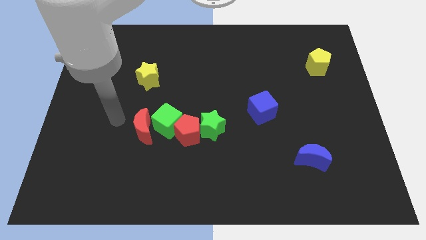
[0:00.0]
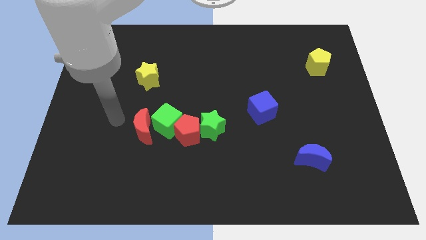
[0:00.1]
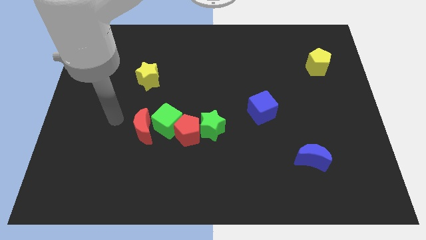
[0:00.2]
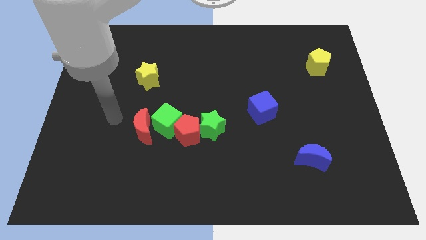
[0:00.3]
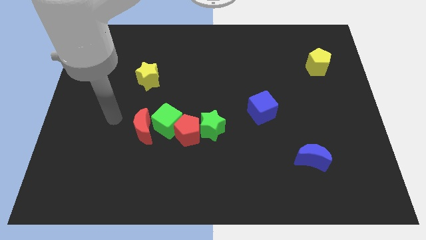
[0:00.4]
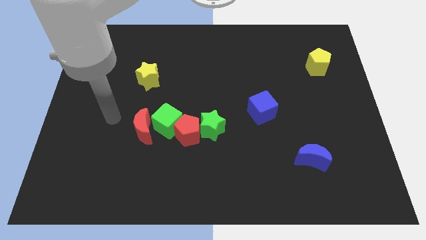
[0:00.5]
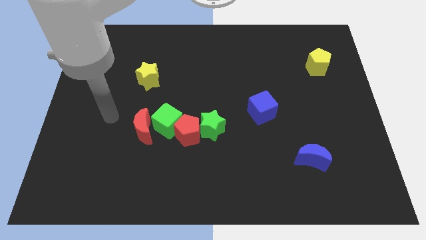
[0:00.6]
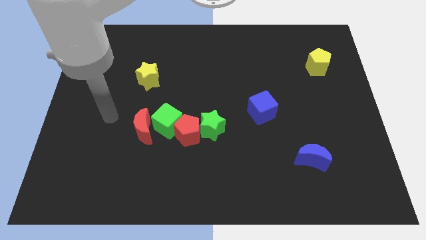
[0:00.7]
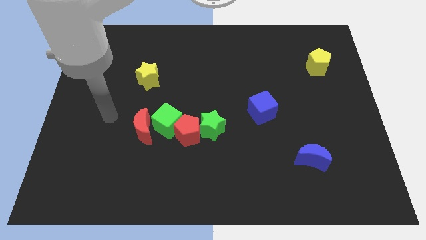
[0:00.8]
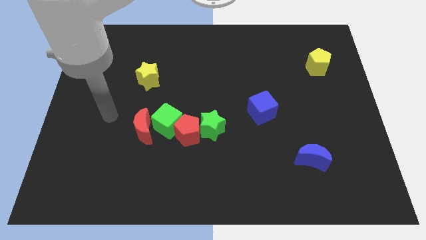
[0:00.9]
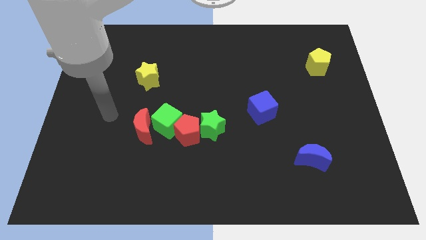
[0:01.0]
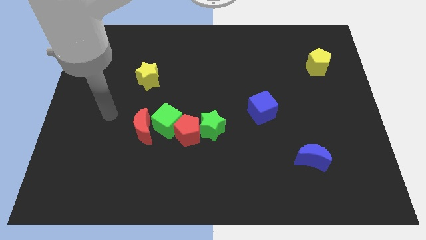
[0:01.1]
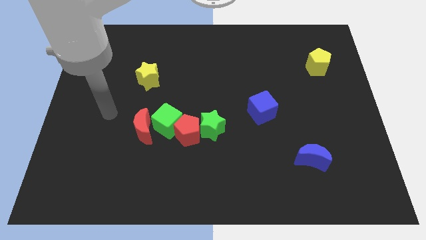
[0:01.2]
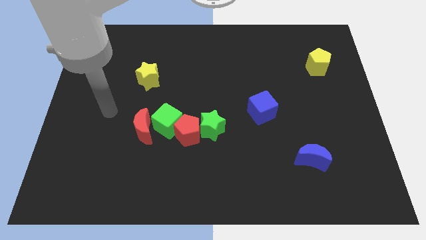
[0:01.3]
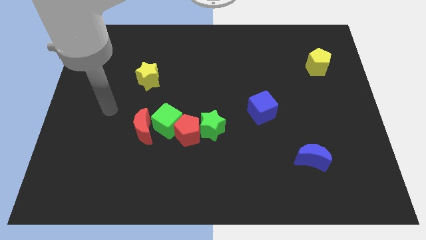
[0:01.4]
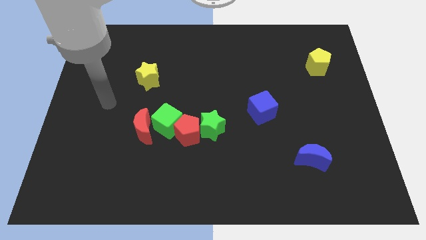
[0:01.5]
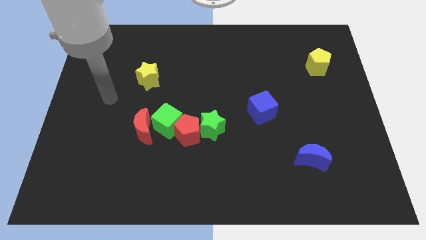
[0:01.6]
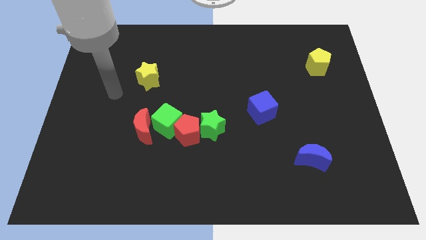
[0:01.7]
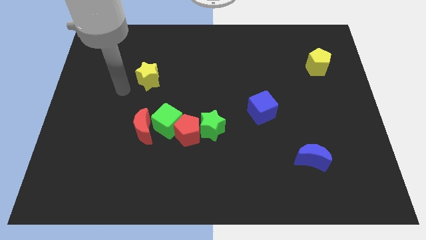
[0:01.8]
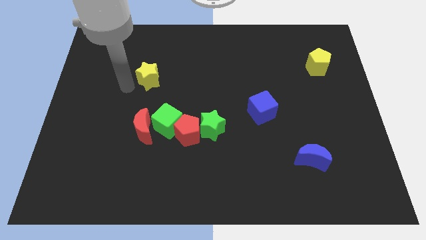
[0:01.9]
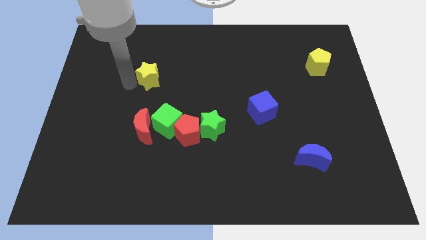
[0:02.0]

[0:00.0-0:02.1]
move the arm to the left of yellow star

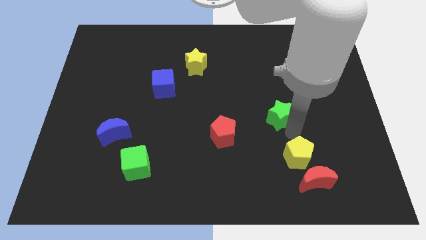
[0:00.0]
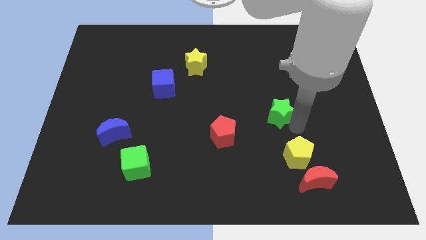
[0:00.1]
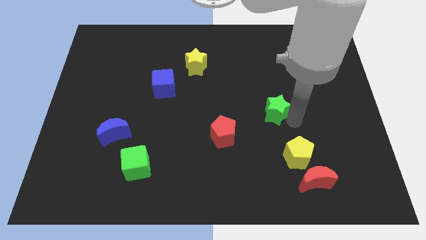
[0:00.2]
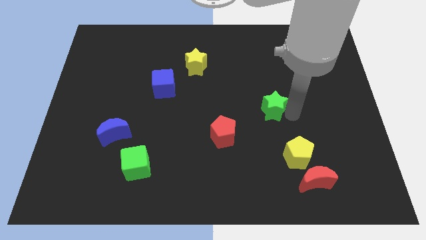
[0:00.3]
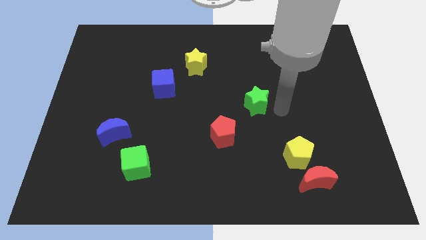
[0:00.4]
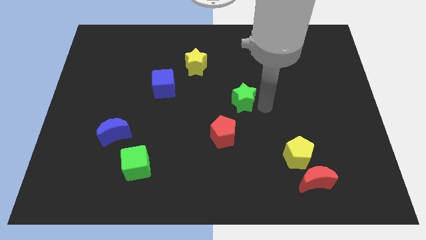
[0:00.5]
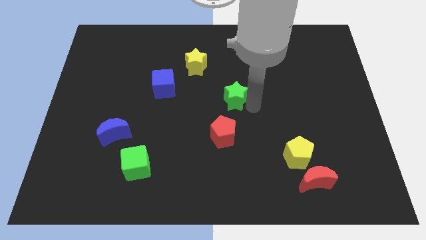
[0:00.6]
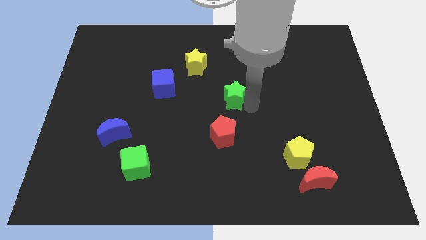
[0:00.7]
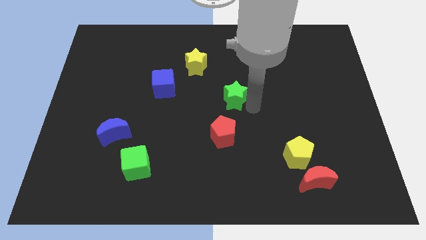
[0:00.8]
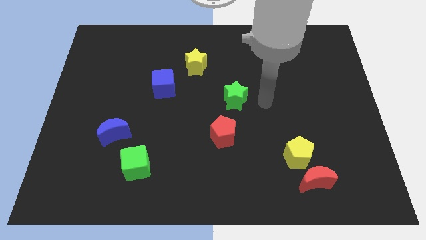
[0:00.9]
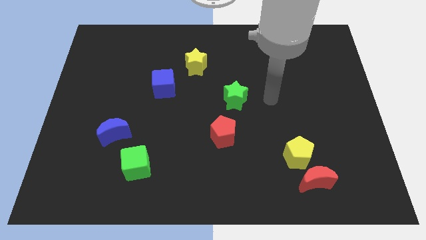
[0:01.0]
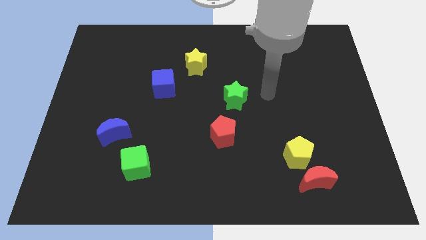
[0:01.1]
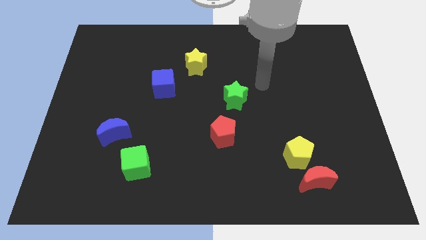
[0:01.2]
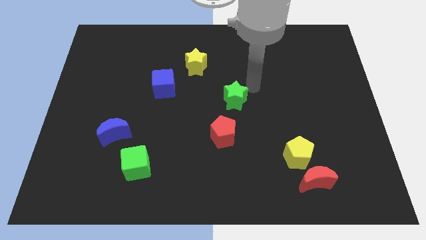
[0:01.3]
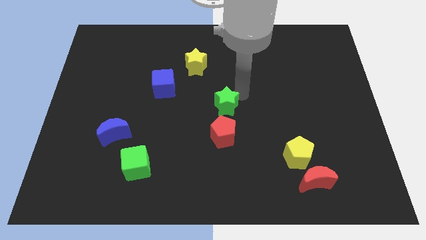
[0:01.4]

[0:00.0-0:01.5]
move the green star to the top of the red pentagon

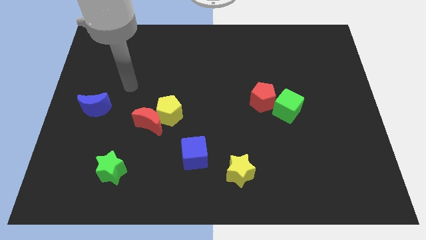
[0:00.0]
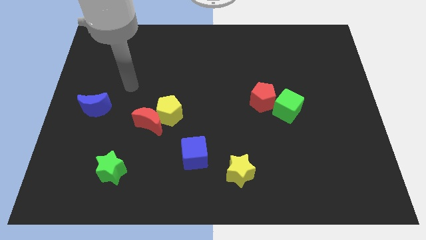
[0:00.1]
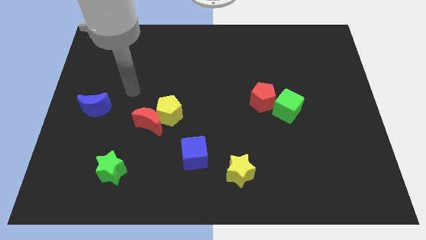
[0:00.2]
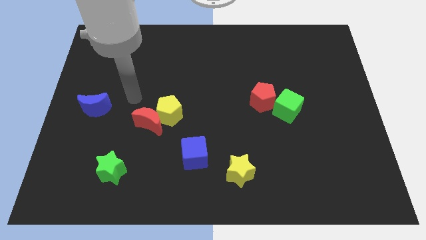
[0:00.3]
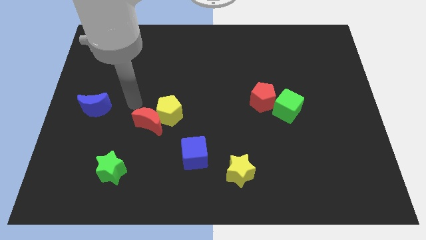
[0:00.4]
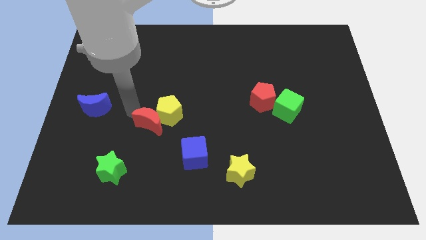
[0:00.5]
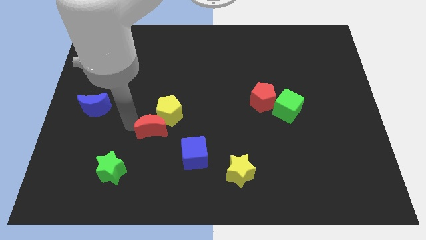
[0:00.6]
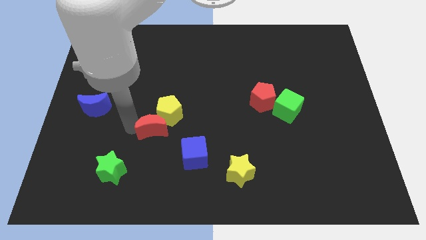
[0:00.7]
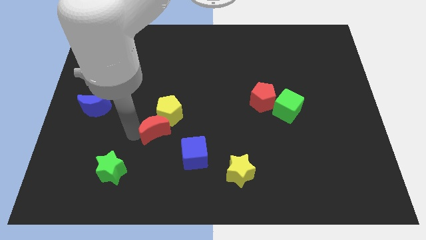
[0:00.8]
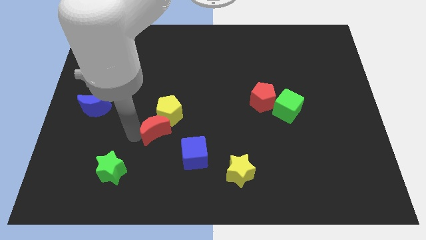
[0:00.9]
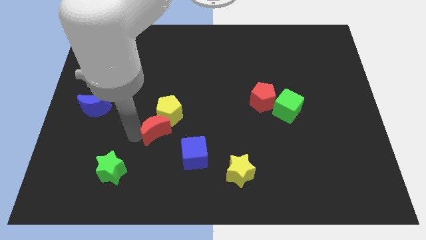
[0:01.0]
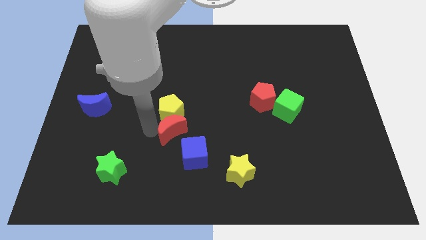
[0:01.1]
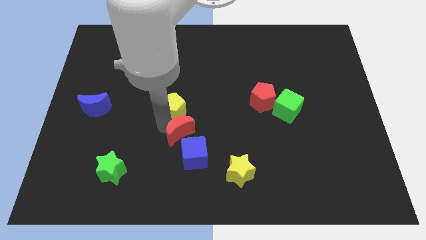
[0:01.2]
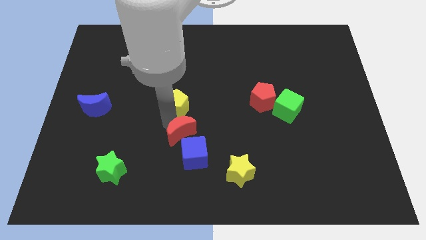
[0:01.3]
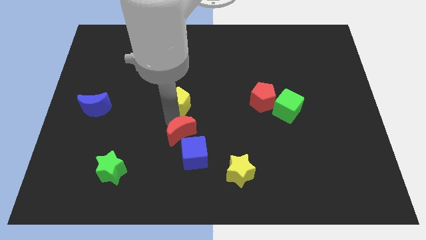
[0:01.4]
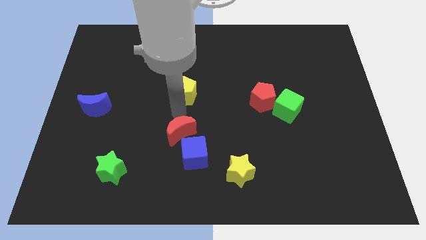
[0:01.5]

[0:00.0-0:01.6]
move the yellow pentagon and red moon vertical to each other

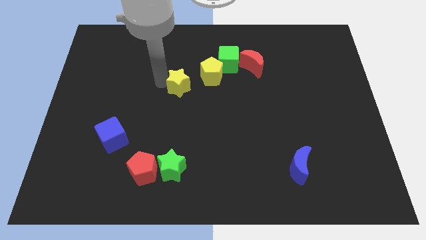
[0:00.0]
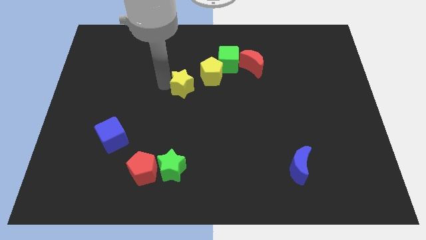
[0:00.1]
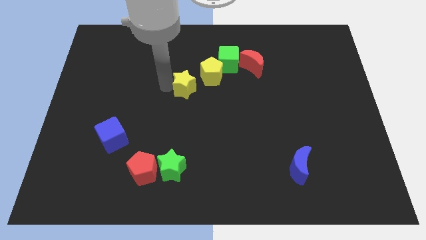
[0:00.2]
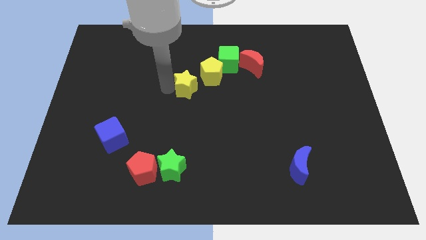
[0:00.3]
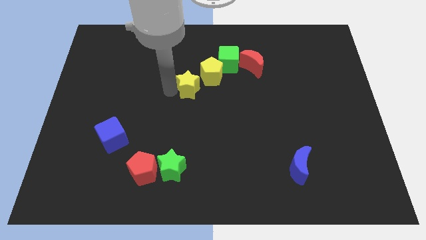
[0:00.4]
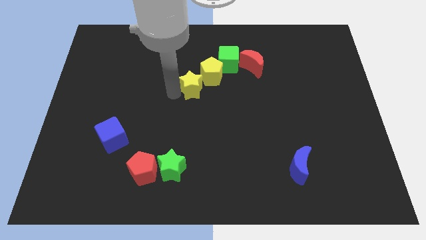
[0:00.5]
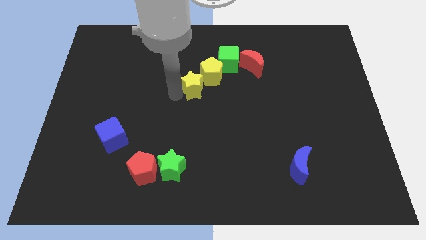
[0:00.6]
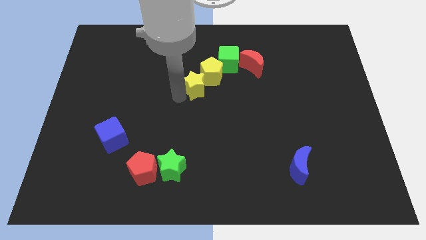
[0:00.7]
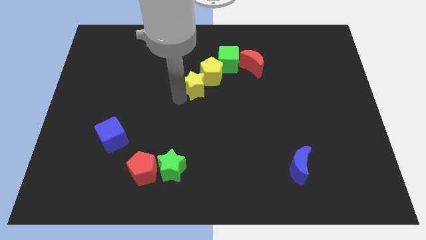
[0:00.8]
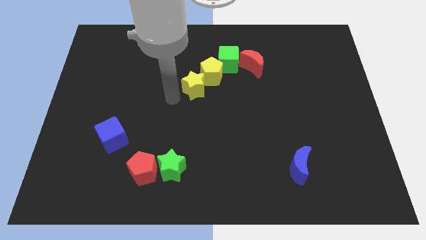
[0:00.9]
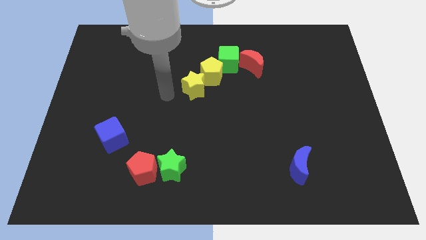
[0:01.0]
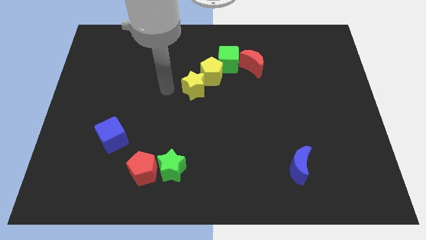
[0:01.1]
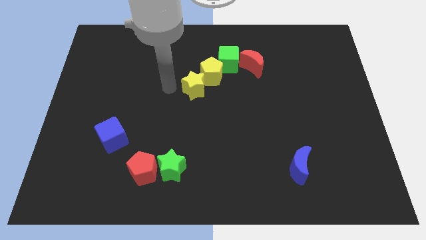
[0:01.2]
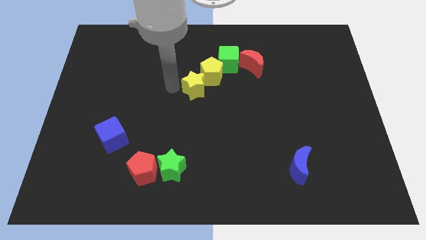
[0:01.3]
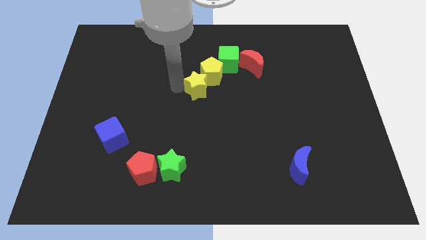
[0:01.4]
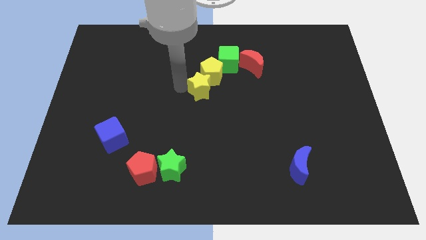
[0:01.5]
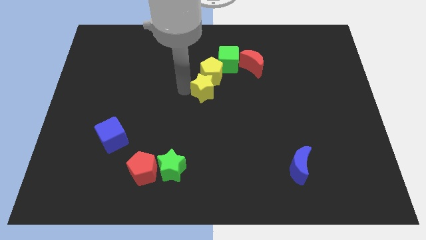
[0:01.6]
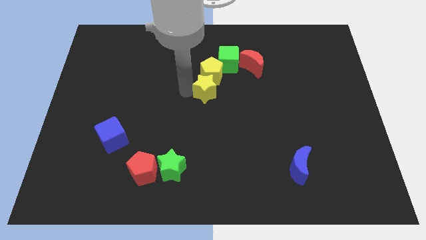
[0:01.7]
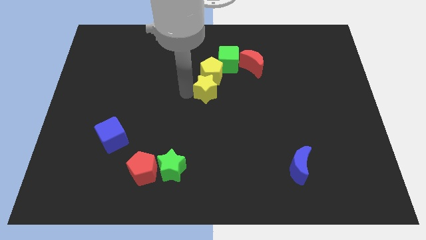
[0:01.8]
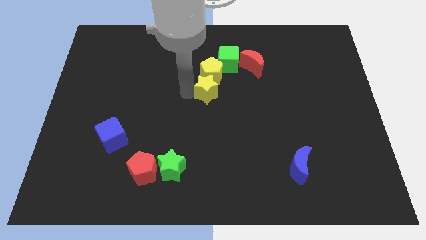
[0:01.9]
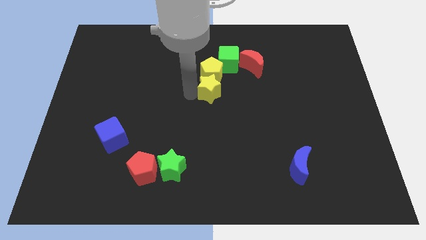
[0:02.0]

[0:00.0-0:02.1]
drag yellow star below yellow pentagon

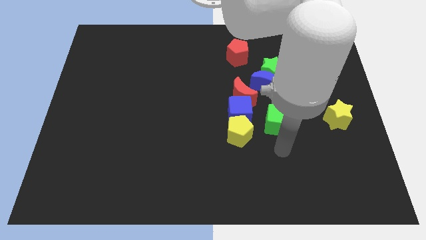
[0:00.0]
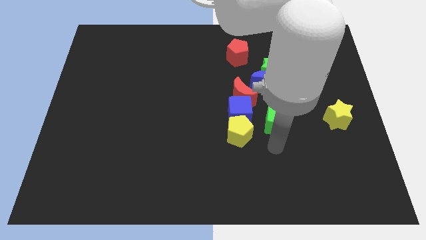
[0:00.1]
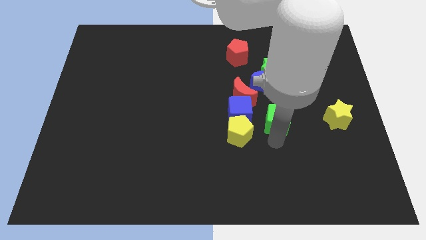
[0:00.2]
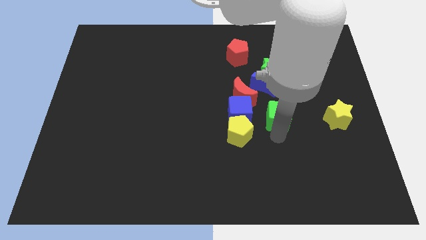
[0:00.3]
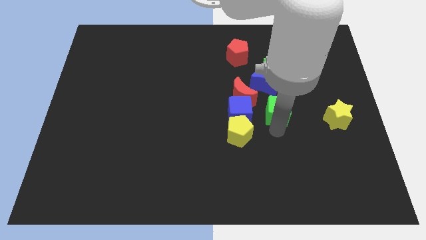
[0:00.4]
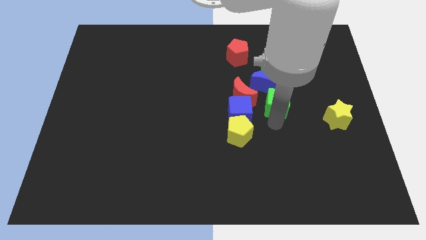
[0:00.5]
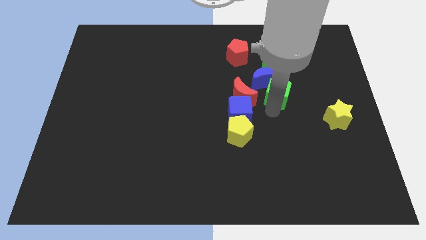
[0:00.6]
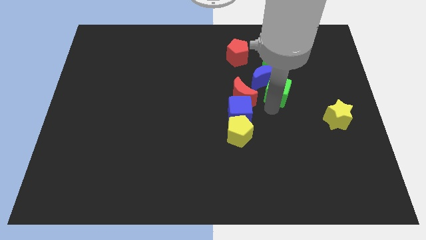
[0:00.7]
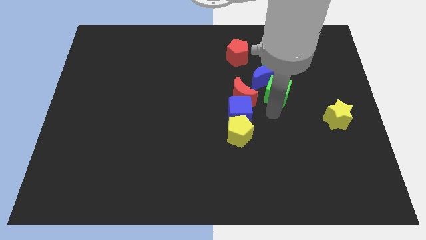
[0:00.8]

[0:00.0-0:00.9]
push the green cube into blue crescent

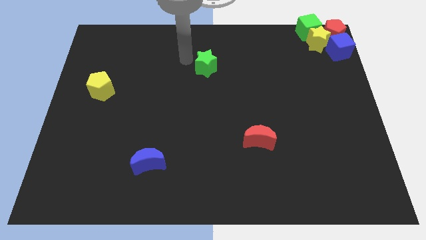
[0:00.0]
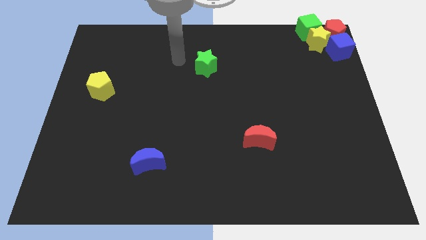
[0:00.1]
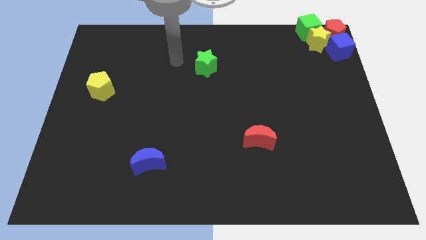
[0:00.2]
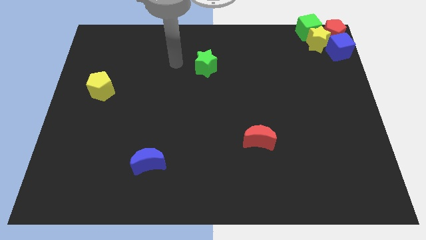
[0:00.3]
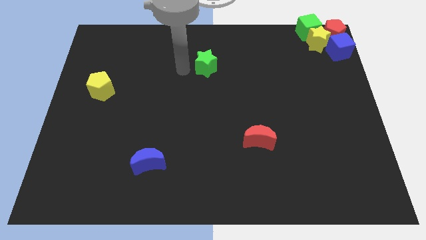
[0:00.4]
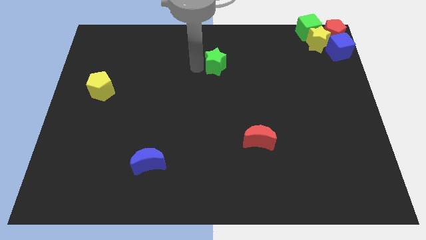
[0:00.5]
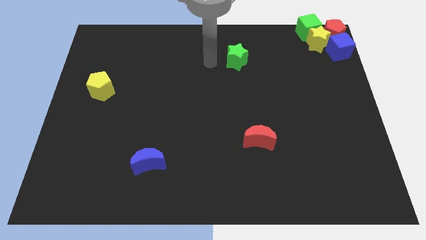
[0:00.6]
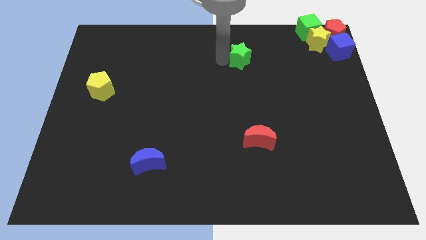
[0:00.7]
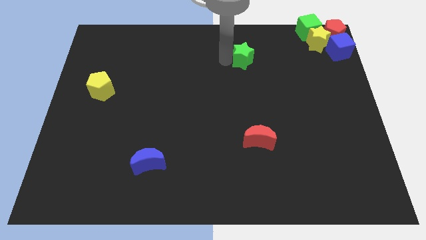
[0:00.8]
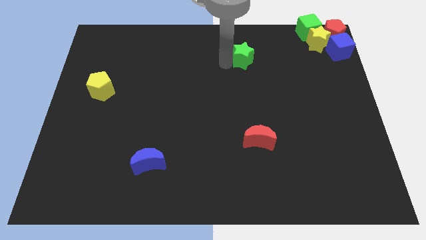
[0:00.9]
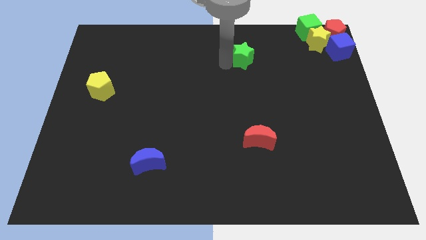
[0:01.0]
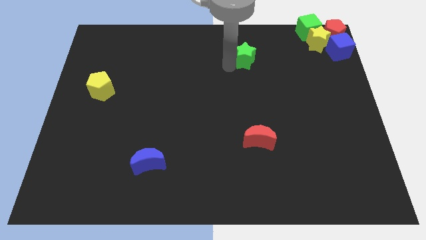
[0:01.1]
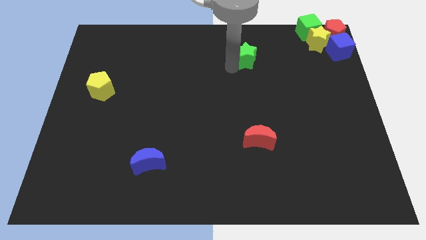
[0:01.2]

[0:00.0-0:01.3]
slide the green star slightly to the right
